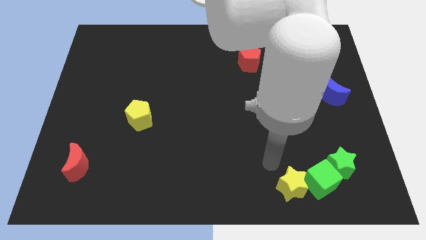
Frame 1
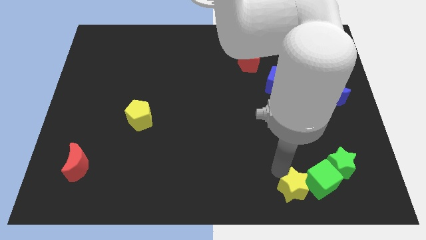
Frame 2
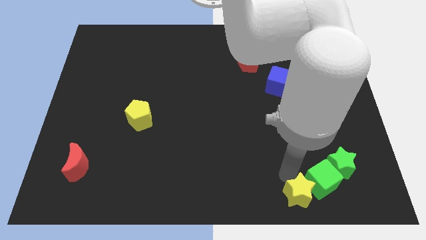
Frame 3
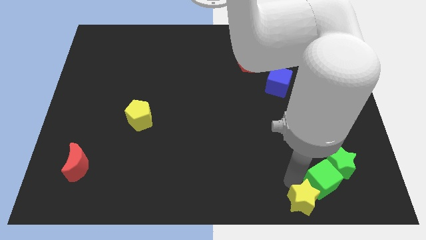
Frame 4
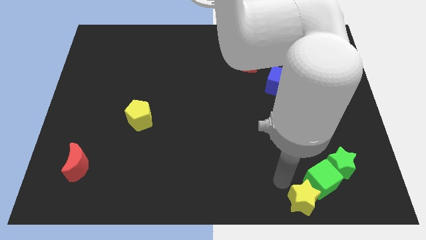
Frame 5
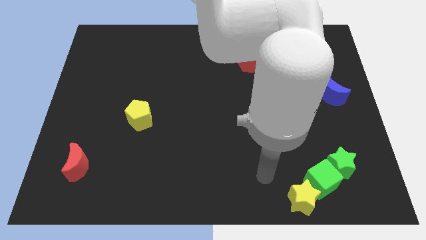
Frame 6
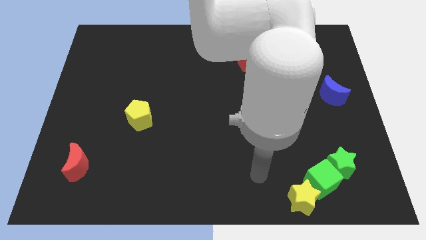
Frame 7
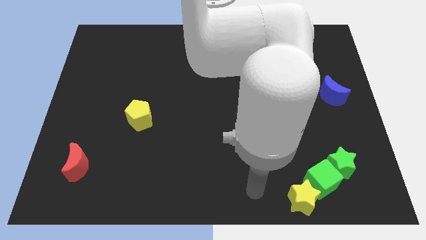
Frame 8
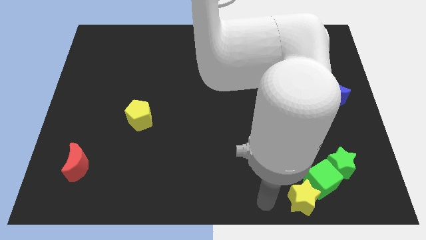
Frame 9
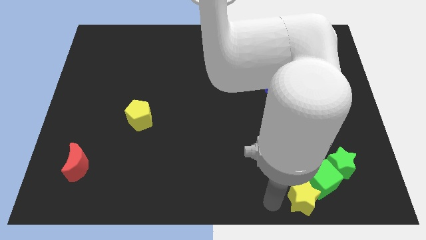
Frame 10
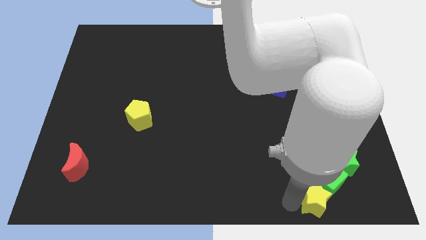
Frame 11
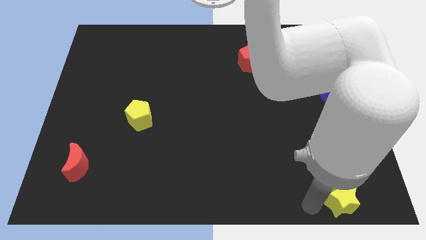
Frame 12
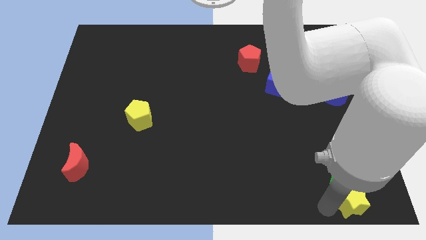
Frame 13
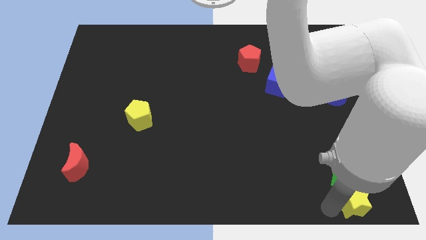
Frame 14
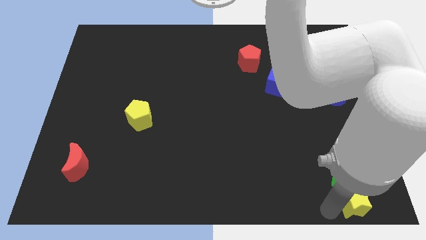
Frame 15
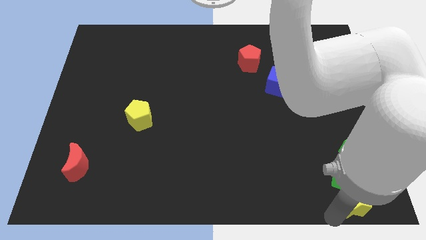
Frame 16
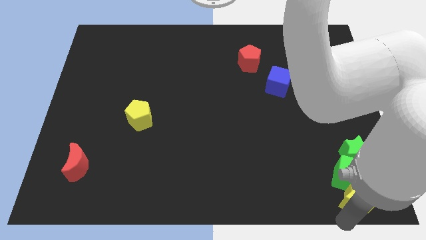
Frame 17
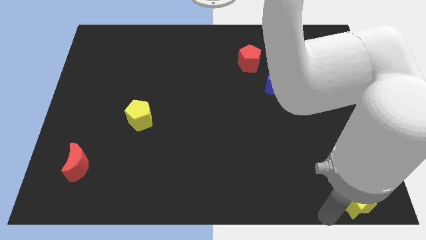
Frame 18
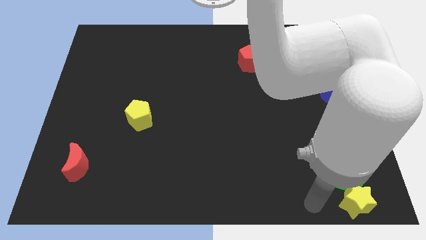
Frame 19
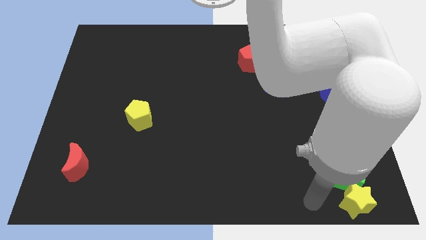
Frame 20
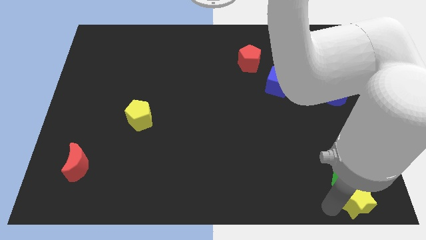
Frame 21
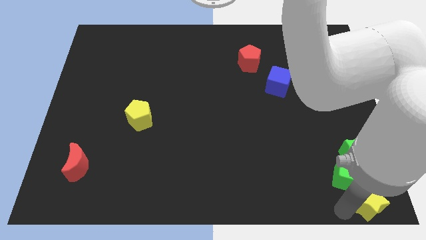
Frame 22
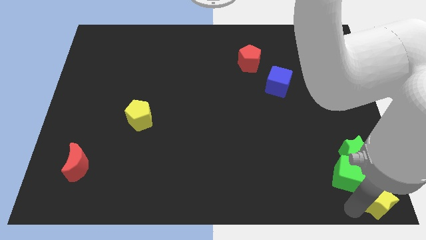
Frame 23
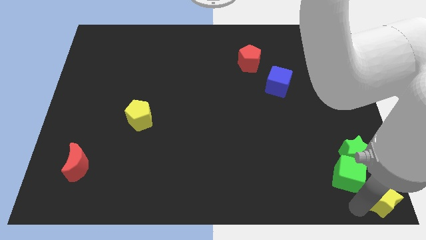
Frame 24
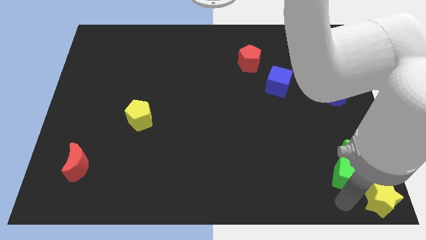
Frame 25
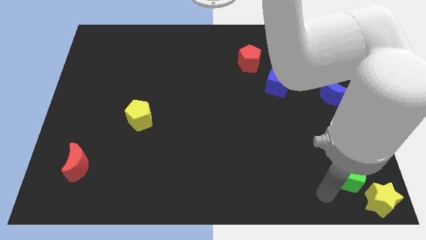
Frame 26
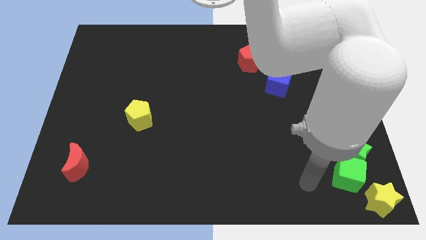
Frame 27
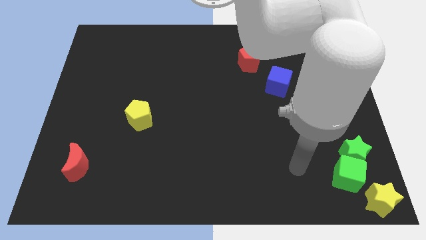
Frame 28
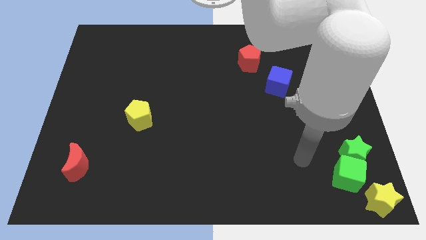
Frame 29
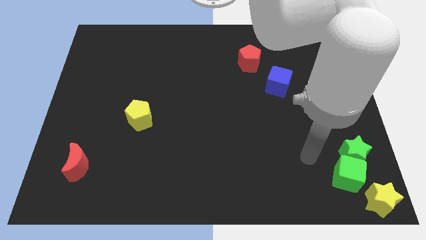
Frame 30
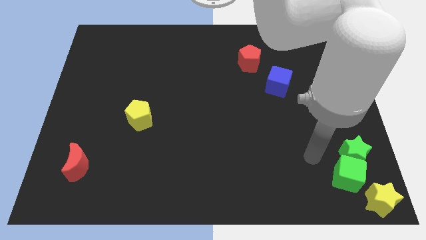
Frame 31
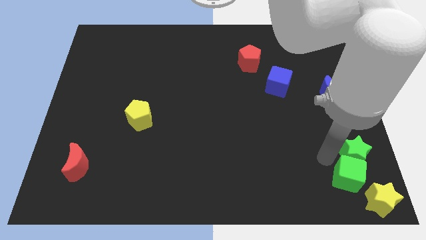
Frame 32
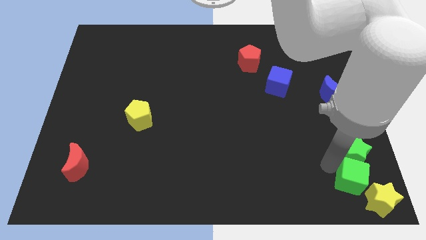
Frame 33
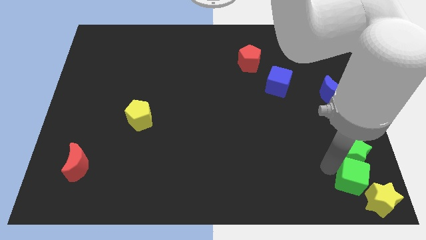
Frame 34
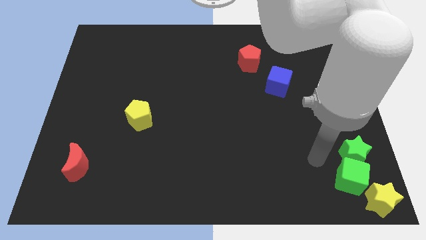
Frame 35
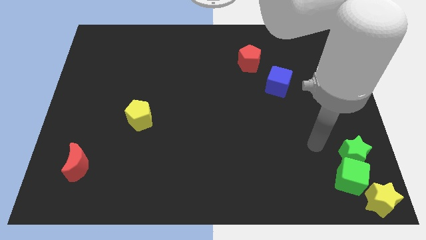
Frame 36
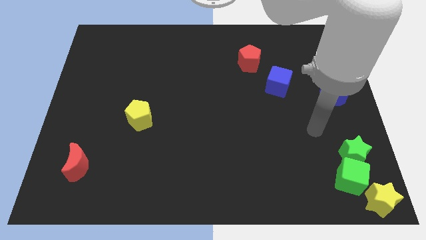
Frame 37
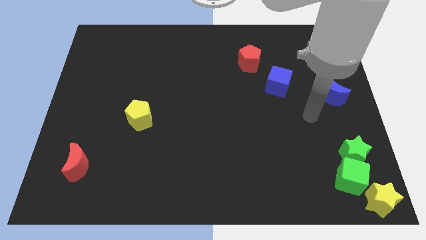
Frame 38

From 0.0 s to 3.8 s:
place yellow star to the bottom right corner of the board

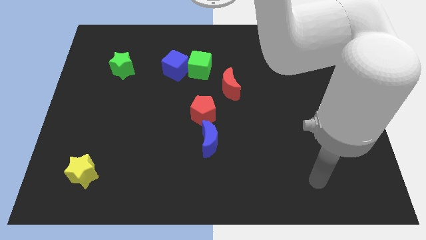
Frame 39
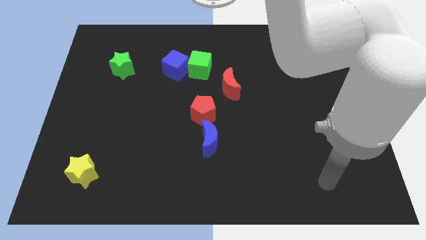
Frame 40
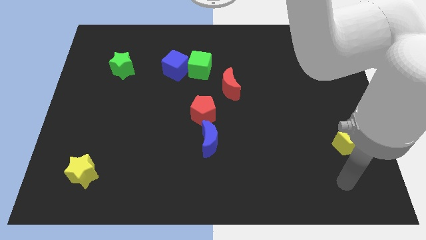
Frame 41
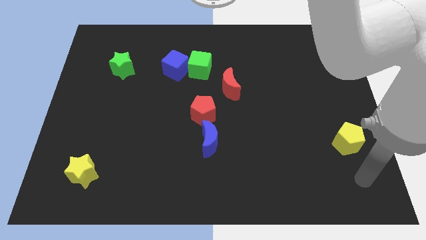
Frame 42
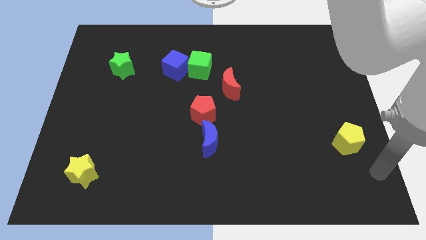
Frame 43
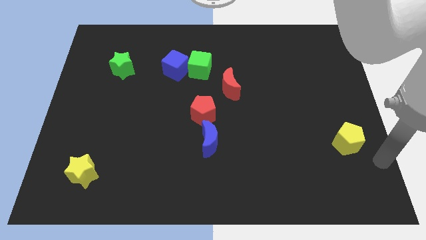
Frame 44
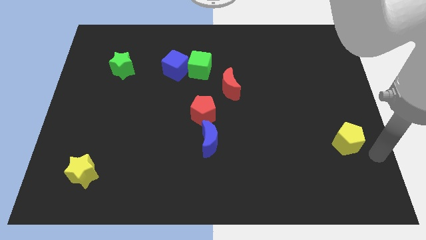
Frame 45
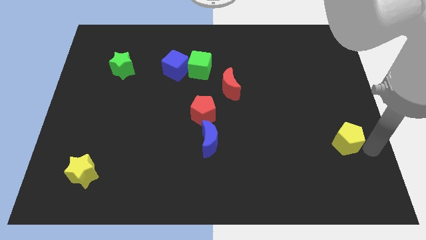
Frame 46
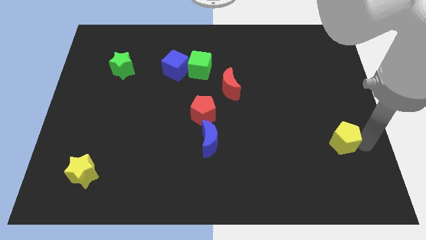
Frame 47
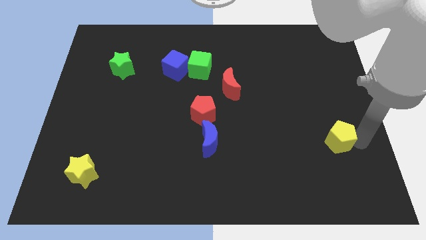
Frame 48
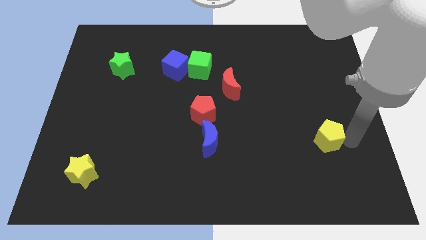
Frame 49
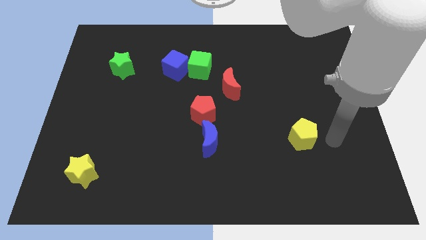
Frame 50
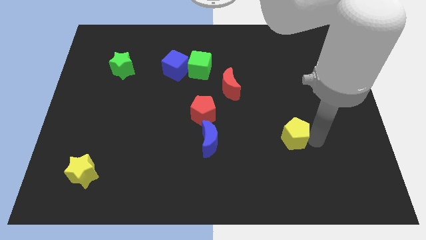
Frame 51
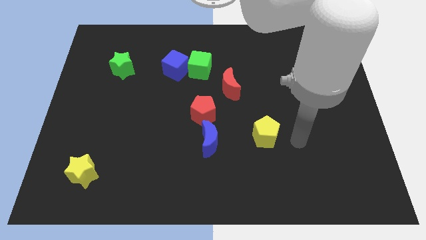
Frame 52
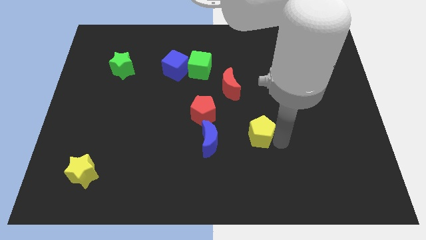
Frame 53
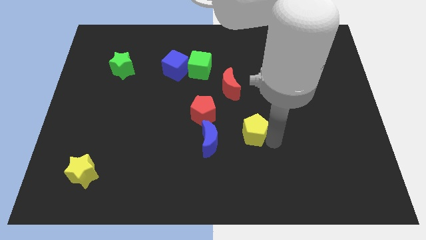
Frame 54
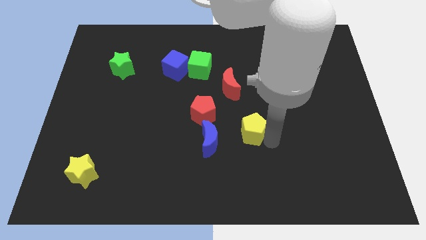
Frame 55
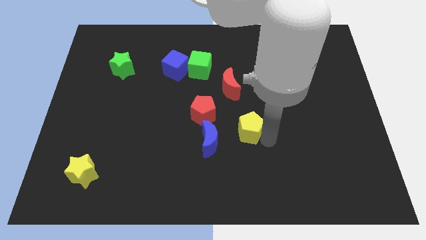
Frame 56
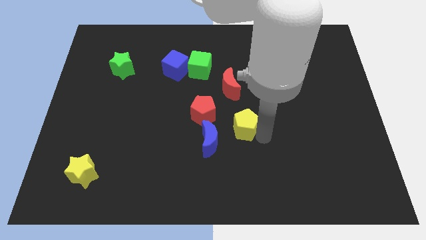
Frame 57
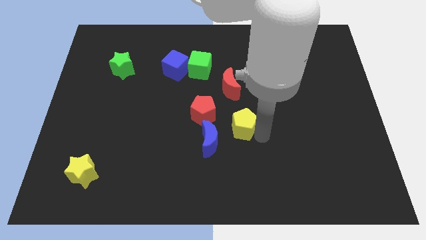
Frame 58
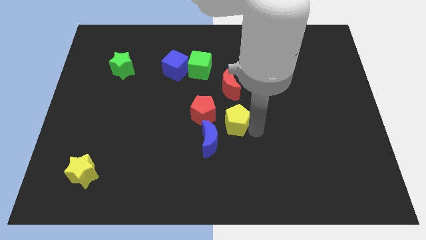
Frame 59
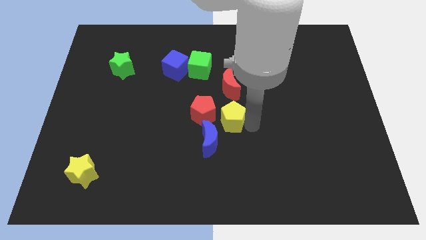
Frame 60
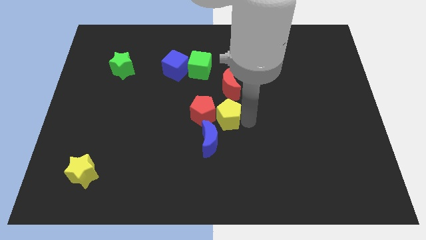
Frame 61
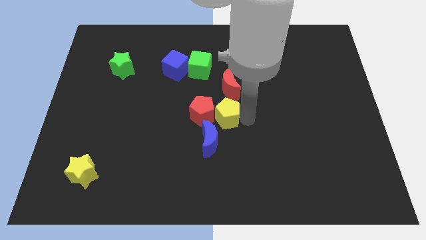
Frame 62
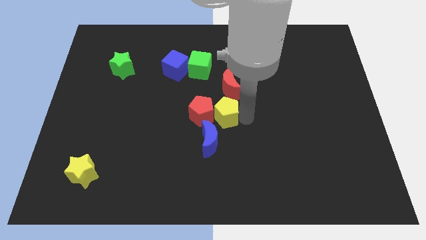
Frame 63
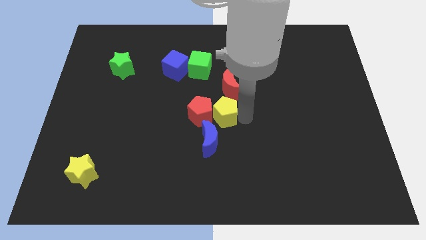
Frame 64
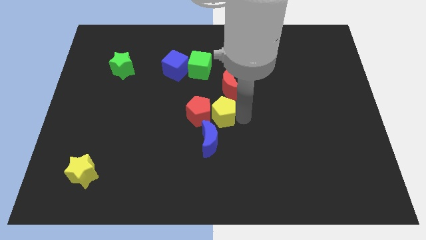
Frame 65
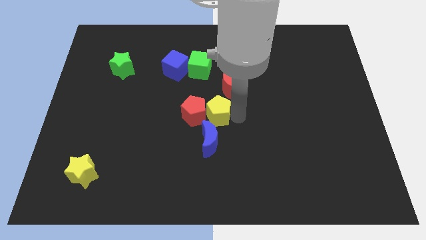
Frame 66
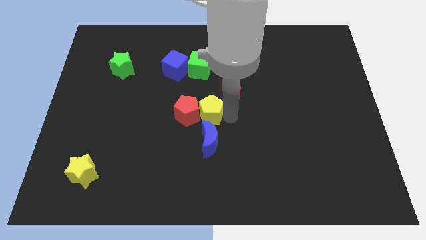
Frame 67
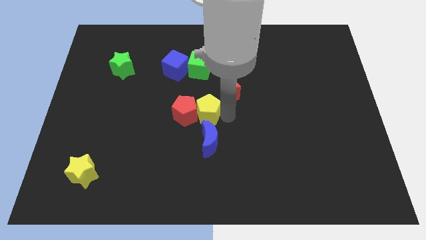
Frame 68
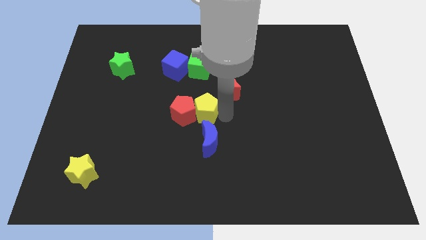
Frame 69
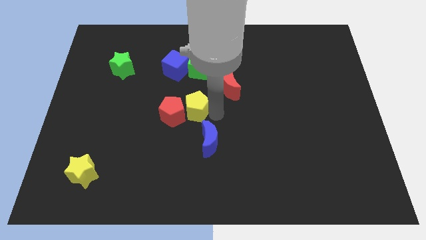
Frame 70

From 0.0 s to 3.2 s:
move the yellow pentagon towards the center of the board

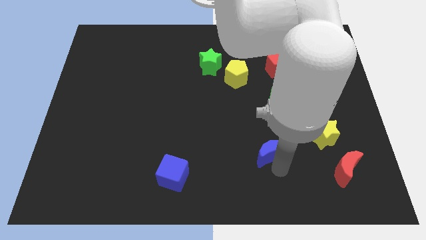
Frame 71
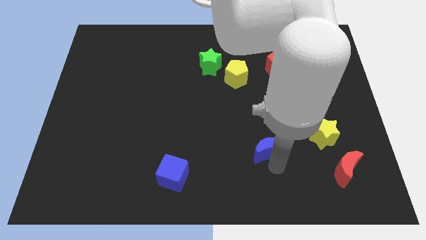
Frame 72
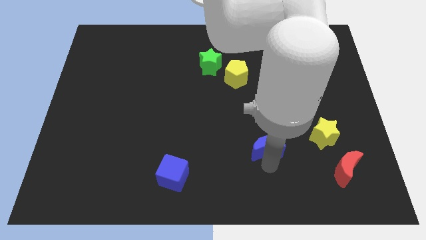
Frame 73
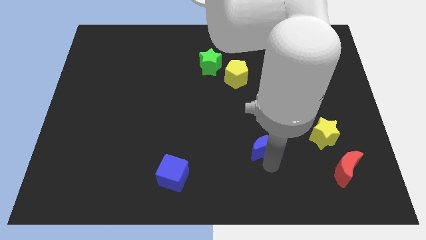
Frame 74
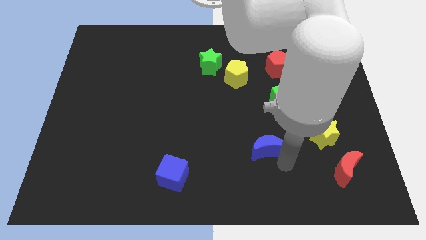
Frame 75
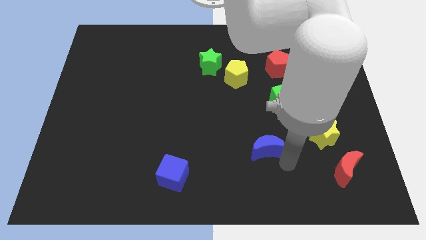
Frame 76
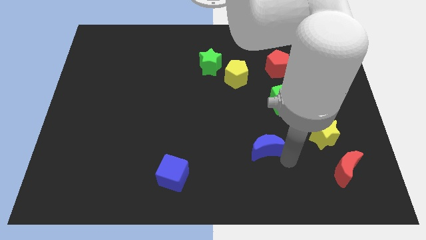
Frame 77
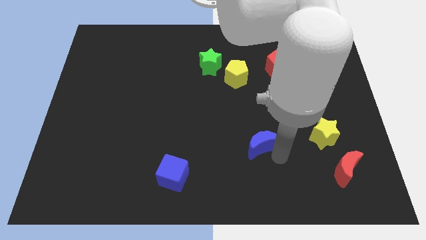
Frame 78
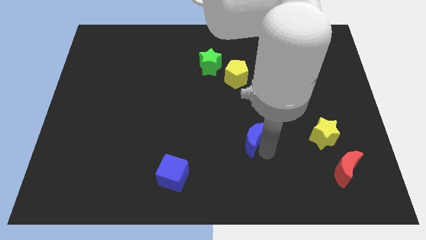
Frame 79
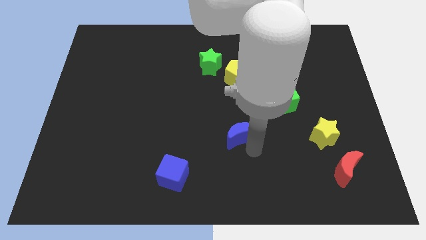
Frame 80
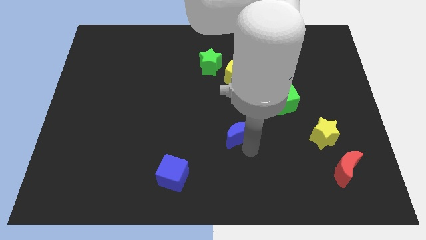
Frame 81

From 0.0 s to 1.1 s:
push the blue moon upward

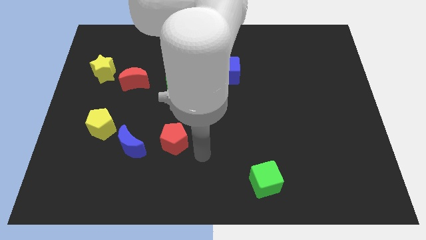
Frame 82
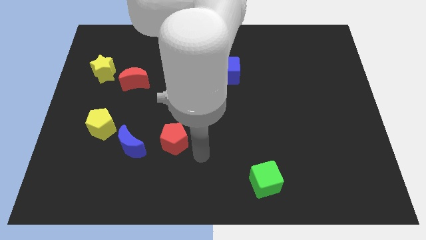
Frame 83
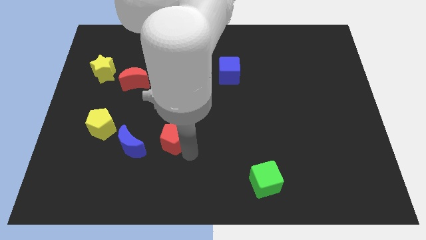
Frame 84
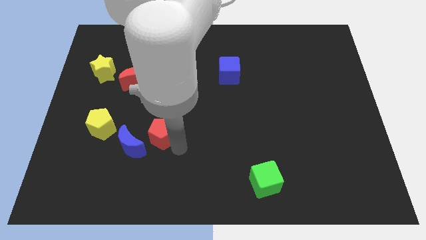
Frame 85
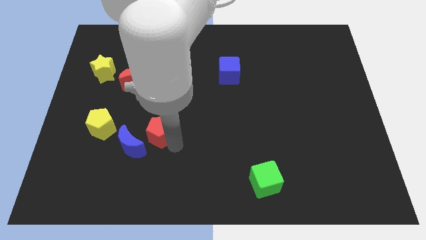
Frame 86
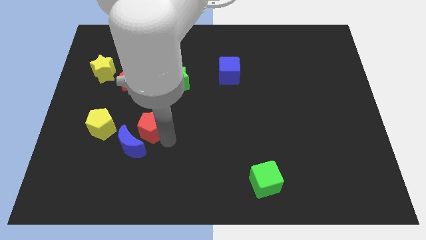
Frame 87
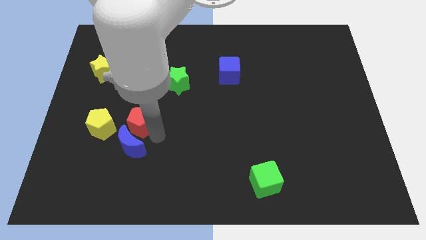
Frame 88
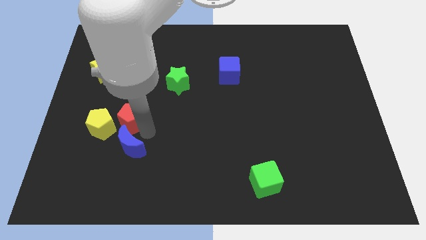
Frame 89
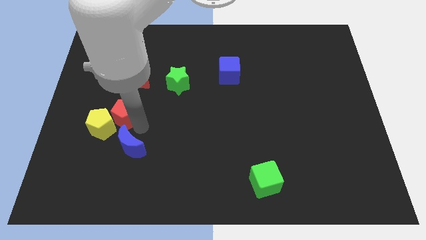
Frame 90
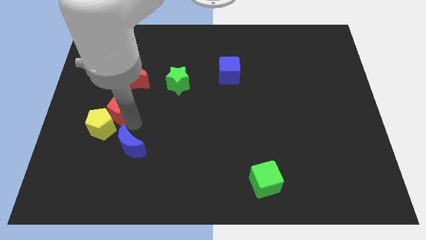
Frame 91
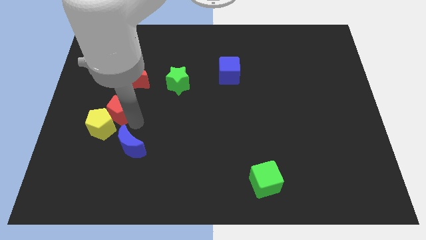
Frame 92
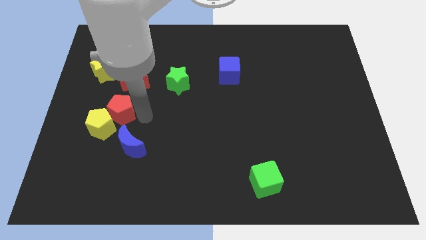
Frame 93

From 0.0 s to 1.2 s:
place the red pentagon in between the red moon and yellow pentagon
